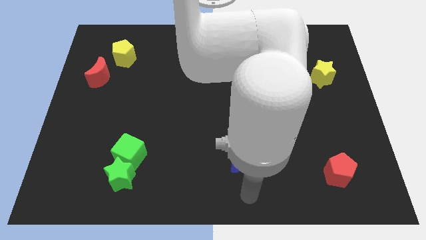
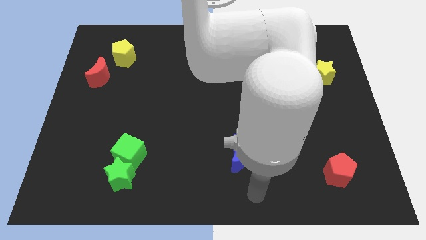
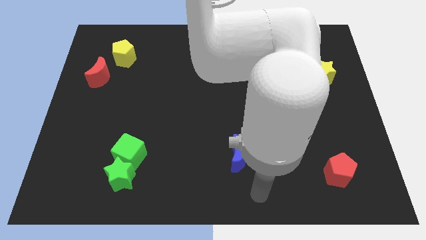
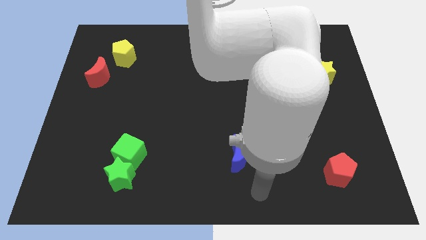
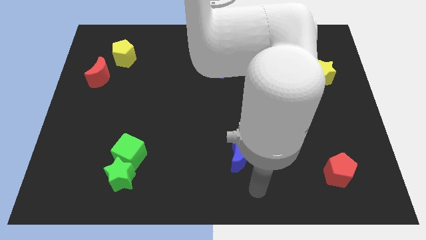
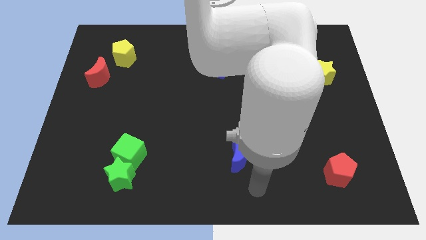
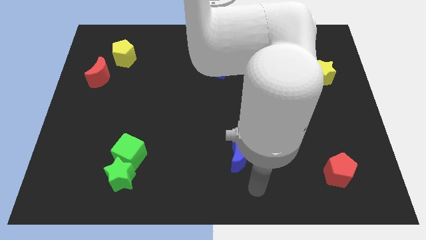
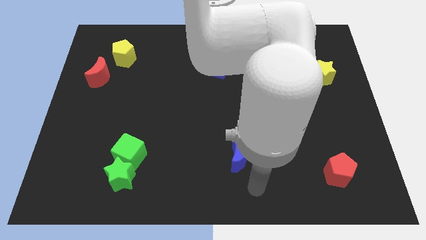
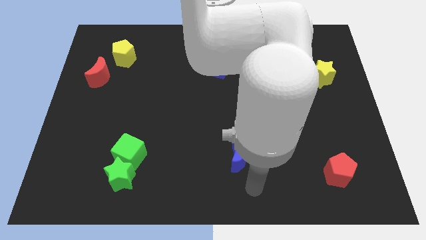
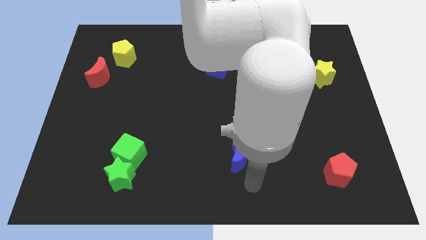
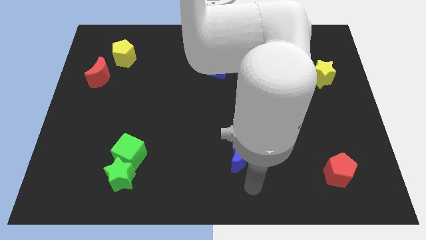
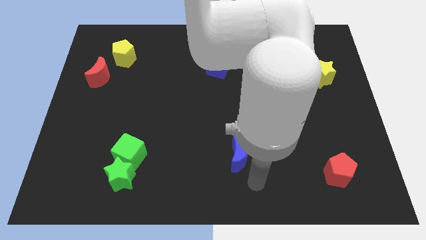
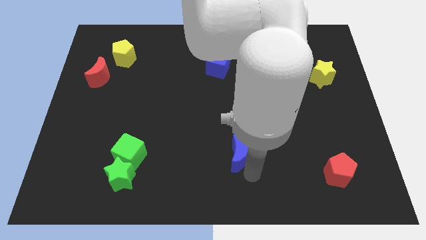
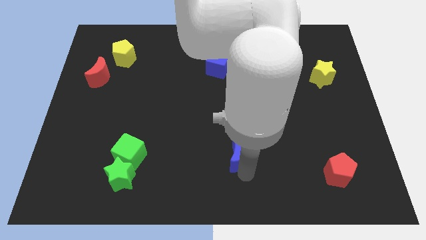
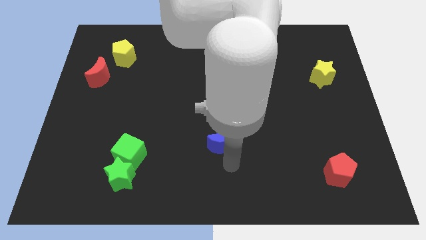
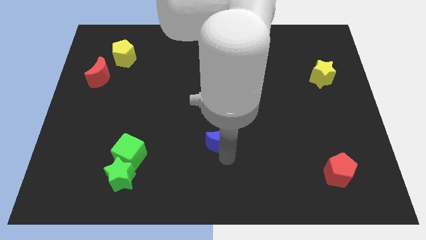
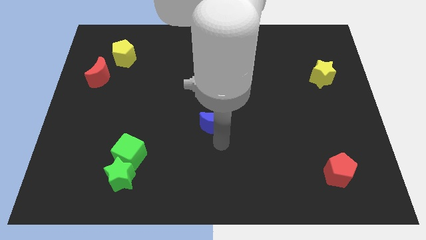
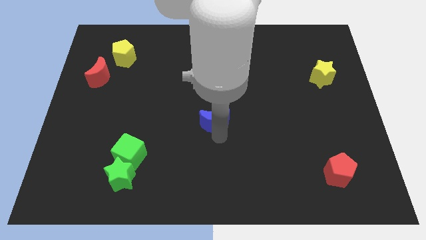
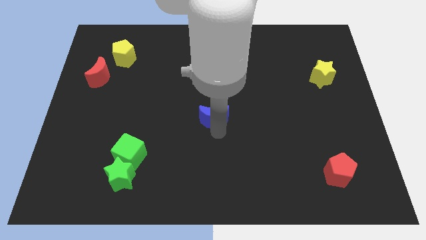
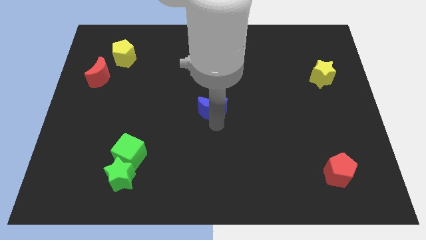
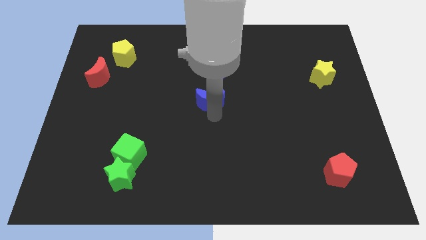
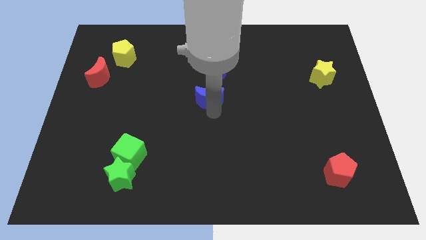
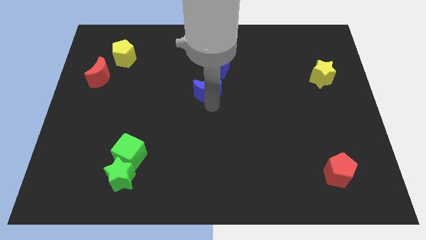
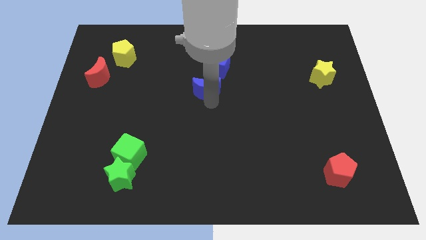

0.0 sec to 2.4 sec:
push blue moon towards the blue cube

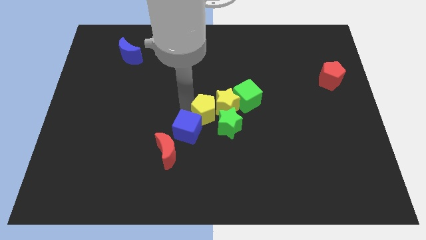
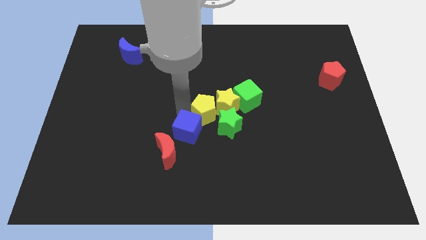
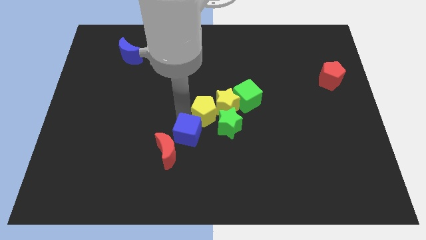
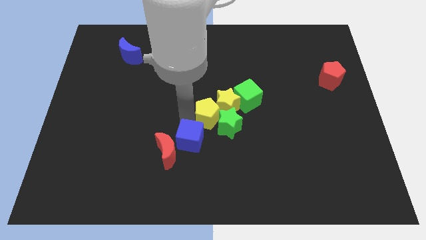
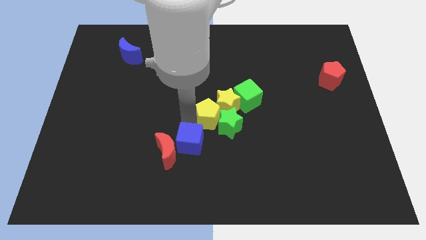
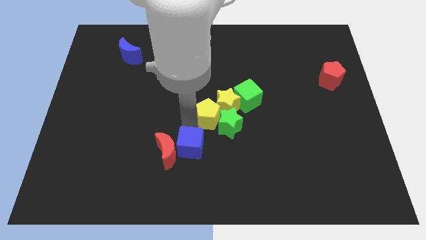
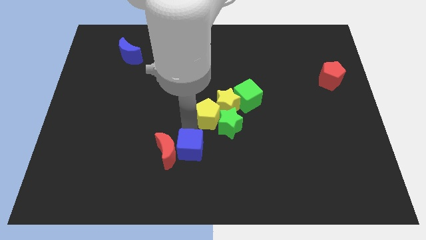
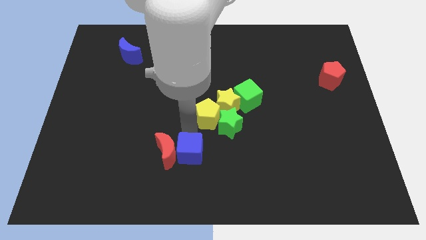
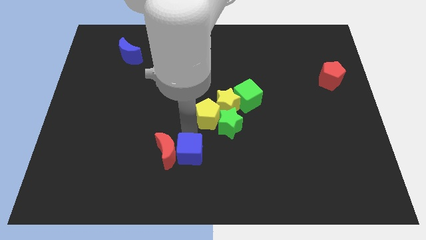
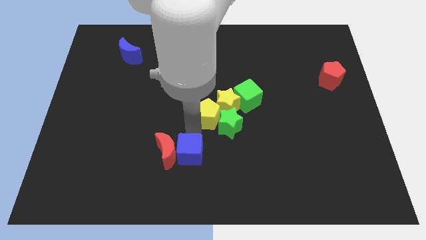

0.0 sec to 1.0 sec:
place the blue cube right to the red moon

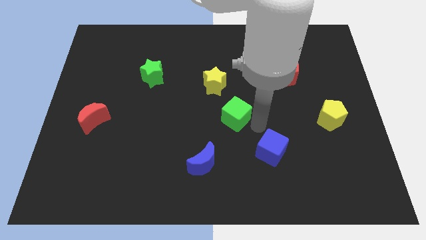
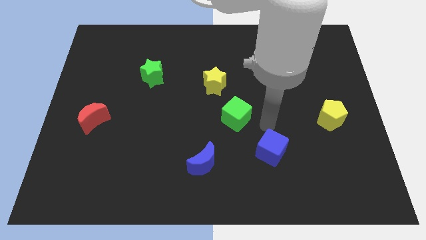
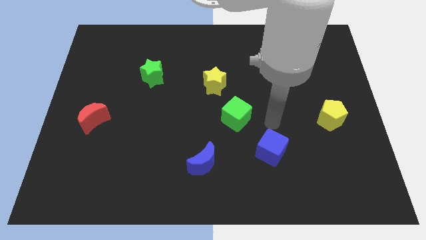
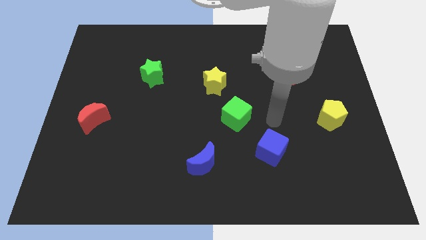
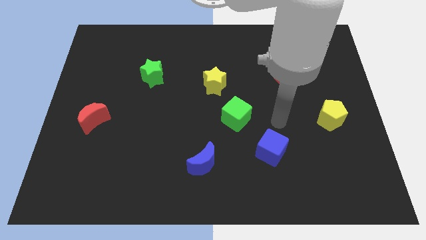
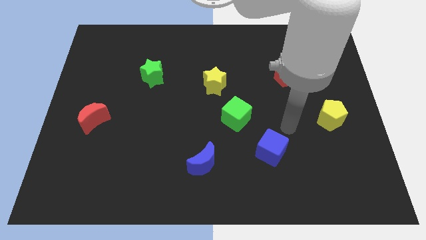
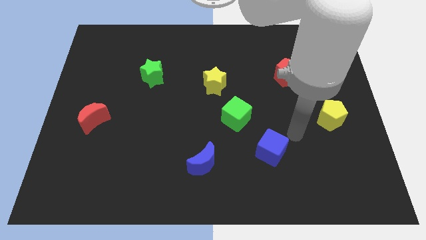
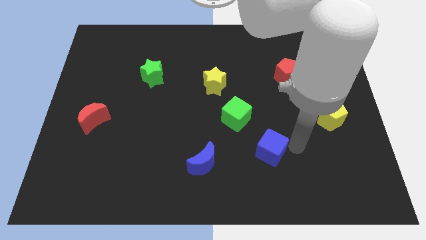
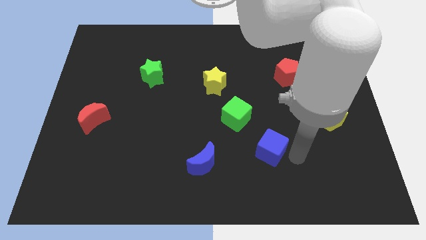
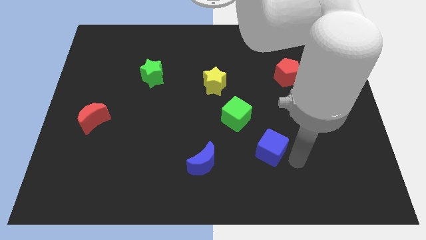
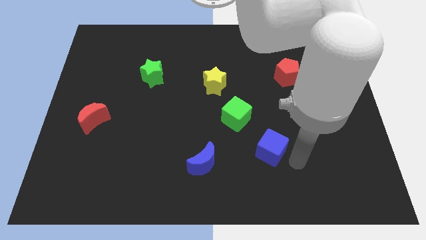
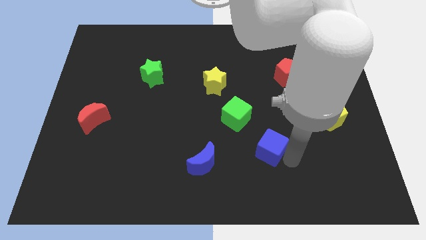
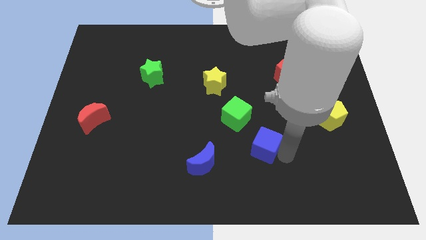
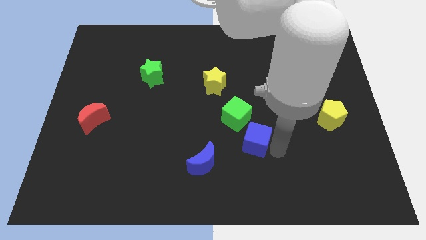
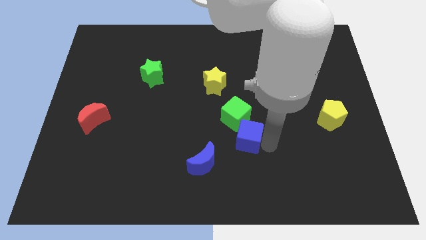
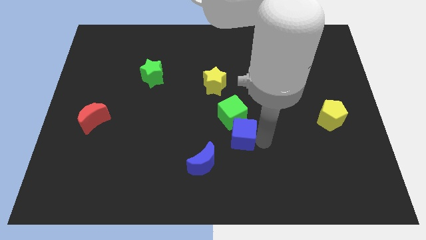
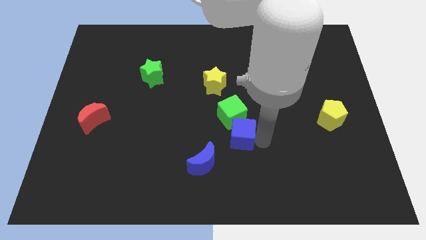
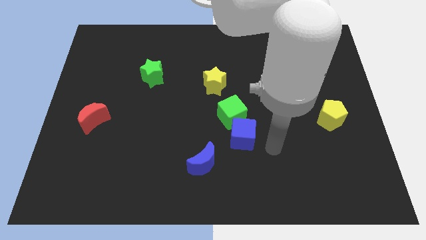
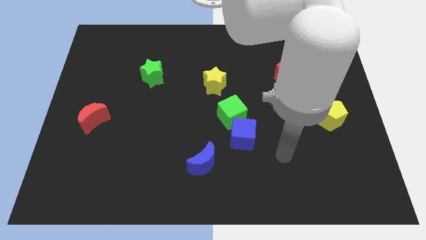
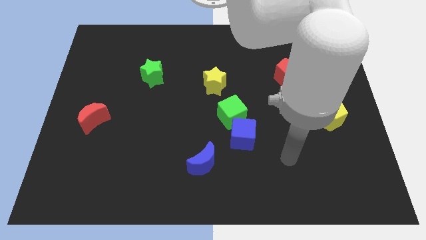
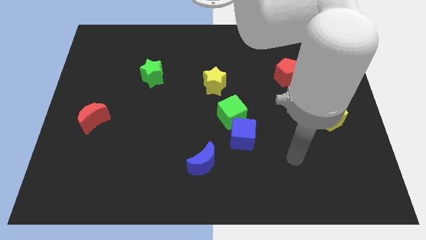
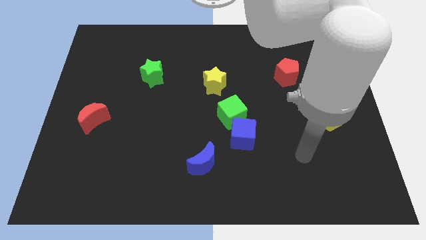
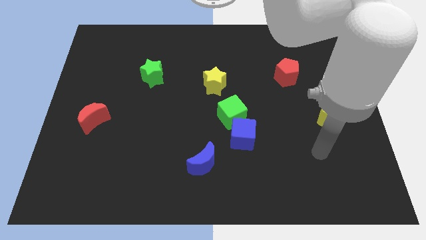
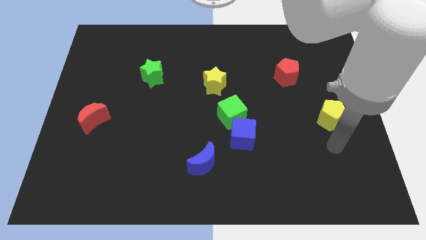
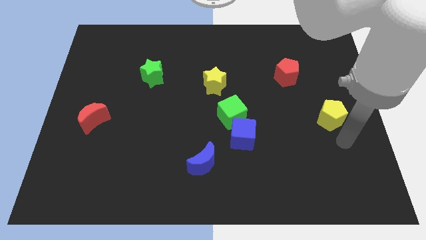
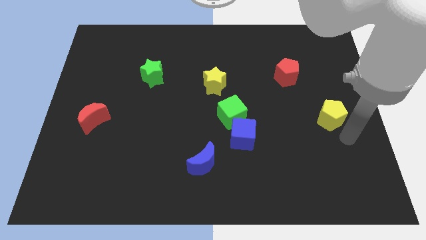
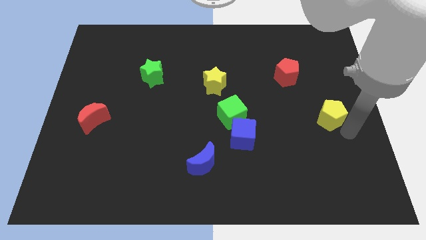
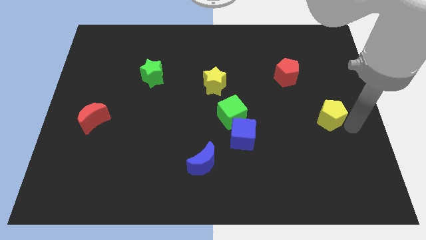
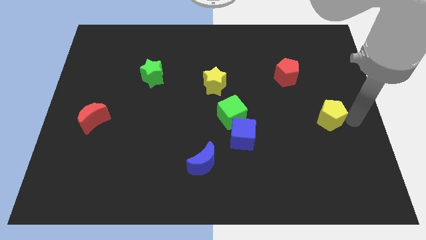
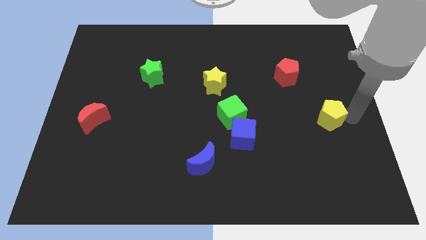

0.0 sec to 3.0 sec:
move the blue cube into the bottom of green cube

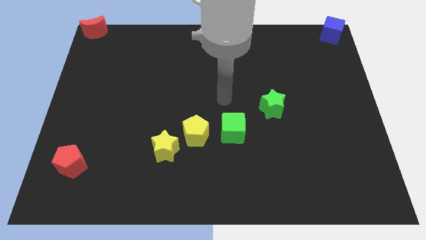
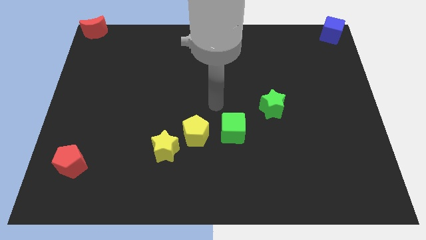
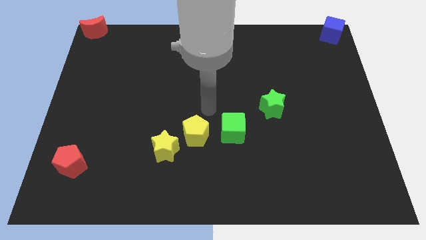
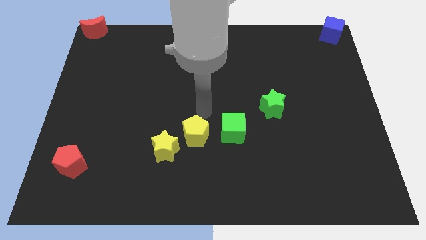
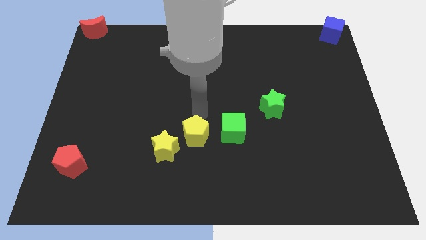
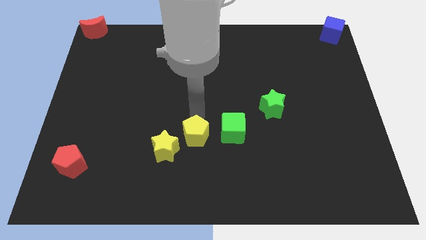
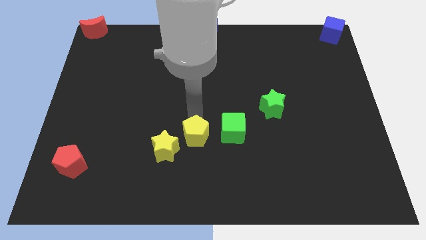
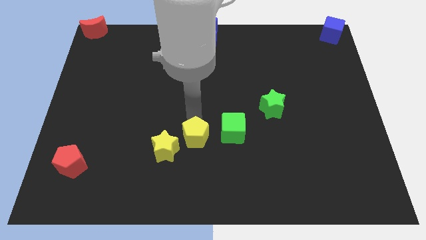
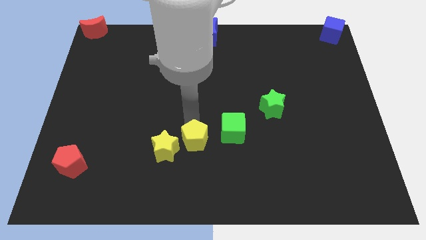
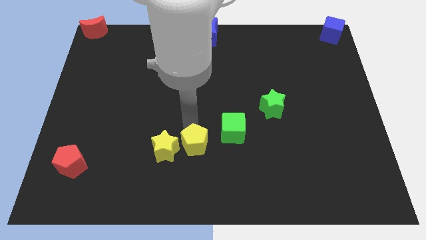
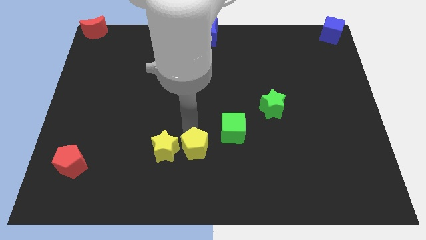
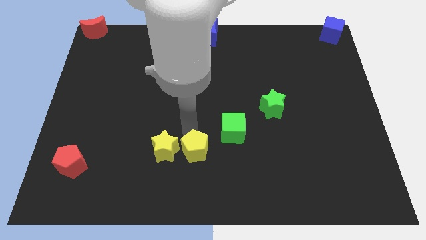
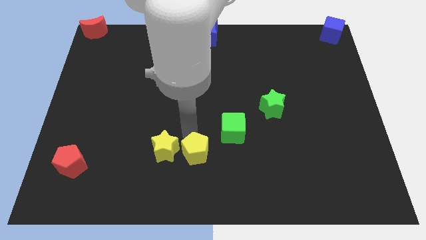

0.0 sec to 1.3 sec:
push the yellow pentagon parallel right to the yellow star

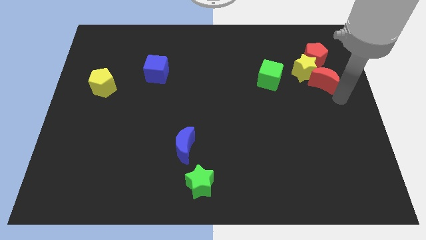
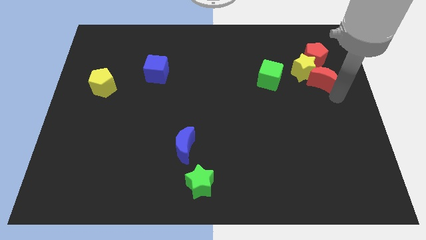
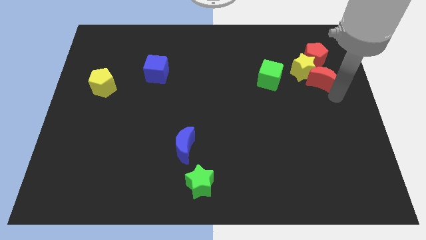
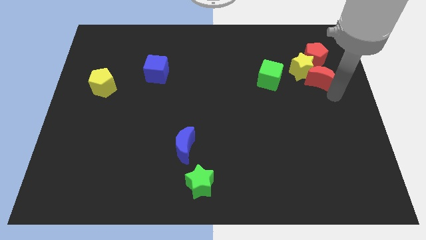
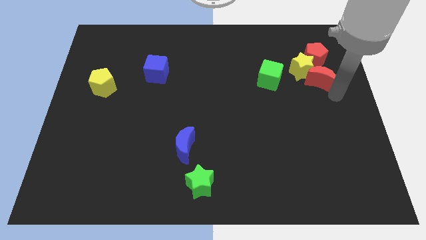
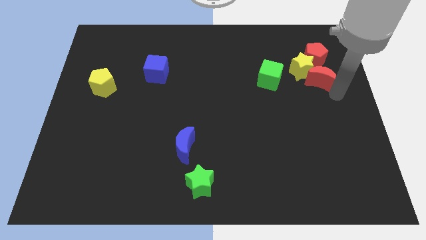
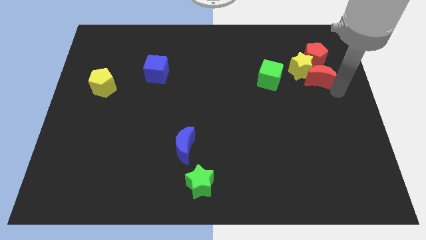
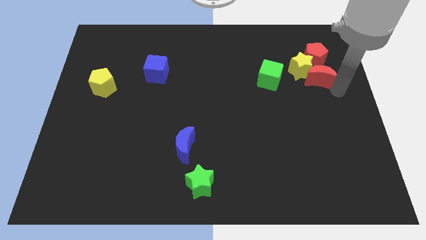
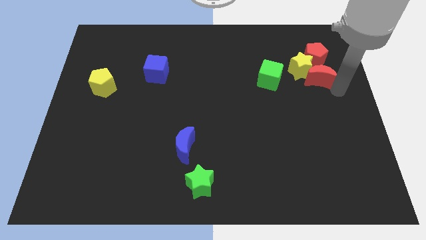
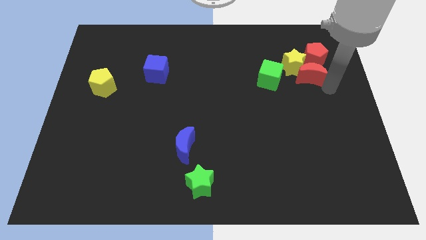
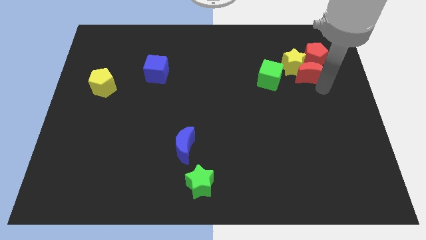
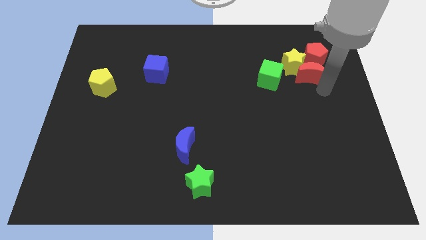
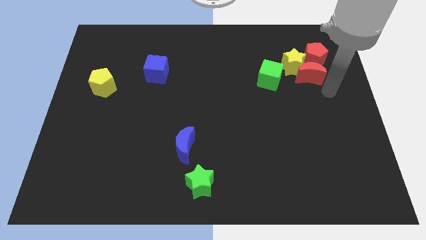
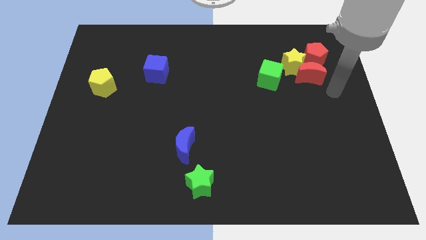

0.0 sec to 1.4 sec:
place the red moon on the bottom left of the red pentagon
